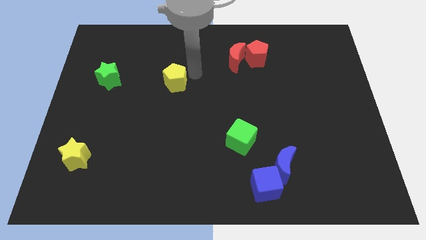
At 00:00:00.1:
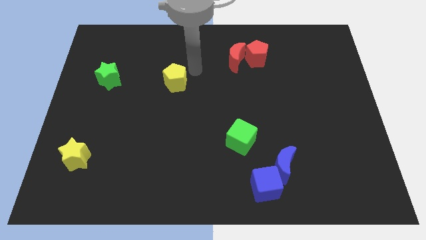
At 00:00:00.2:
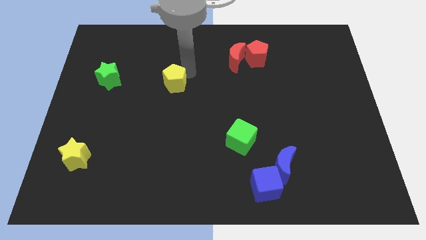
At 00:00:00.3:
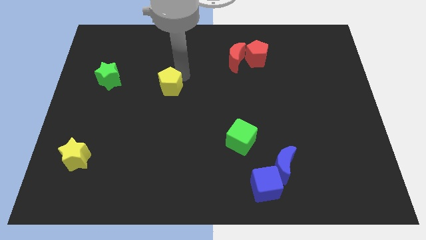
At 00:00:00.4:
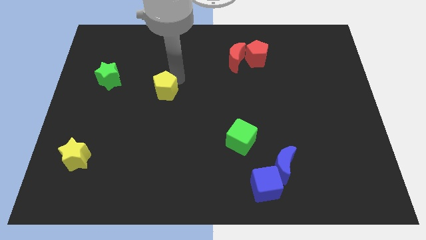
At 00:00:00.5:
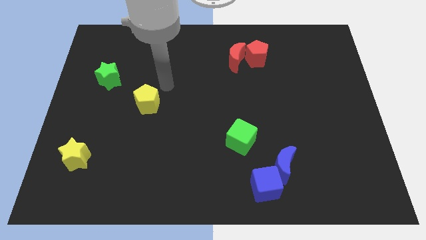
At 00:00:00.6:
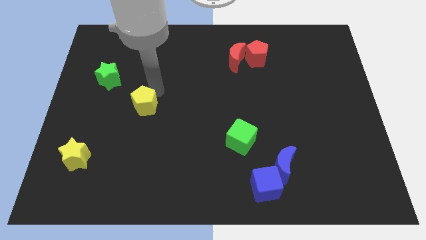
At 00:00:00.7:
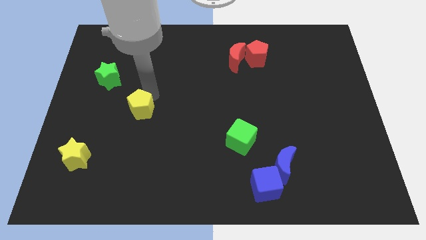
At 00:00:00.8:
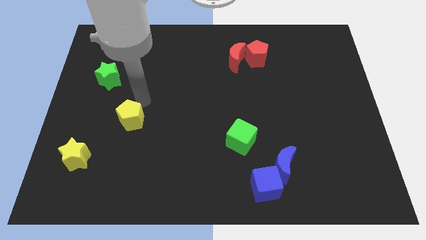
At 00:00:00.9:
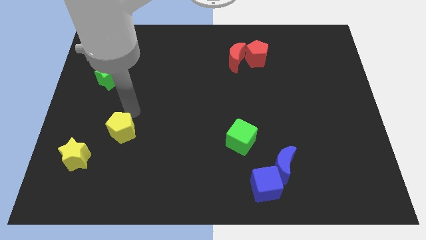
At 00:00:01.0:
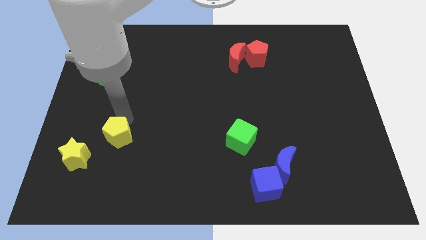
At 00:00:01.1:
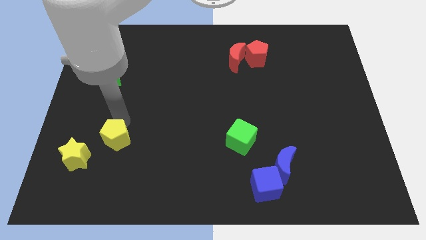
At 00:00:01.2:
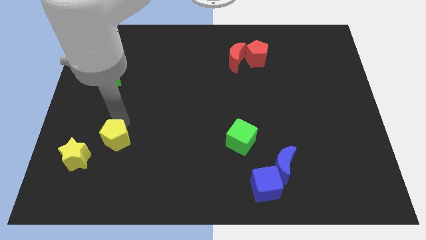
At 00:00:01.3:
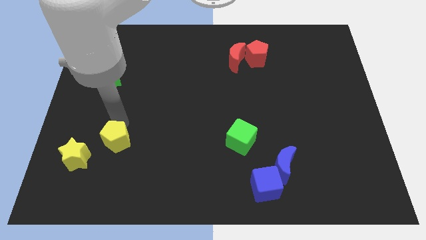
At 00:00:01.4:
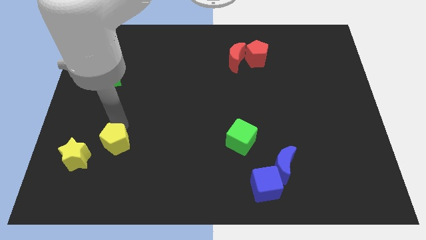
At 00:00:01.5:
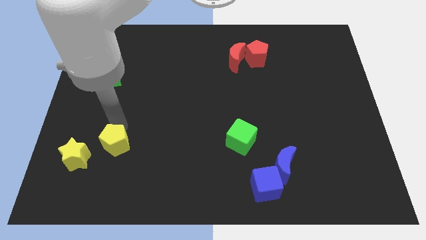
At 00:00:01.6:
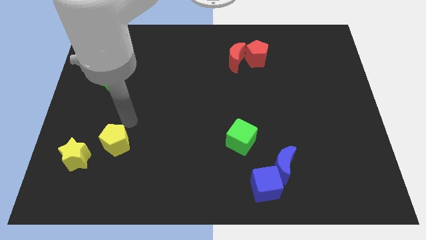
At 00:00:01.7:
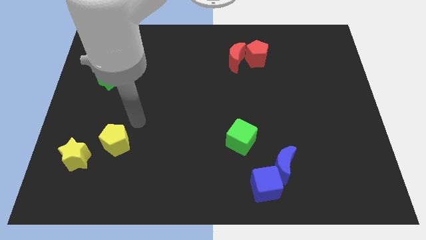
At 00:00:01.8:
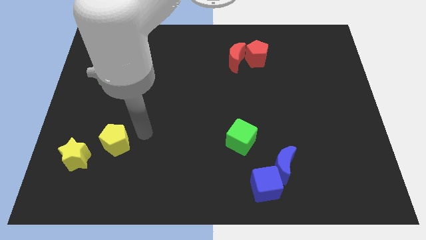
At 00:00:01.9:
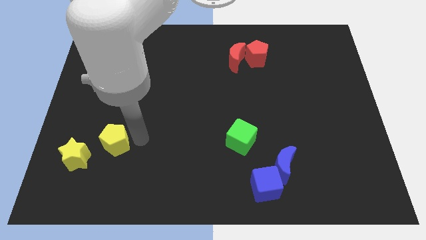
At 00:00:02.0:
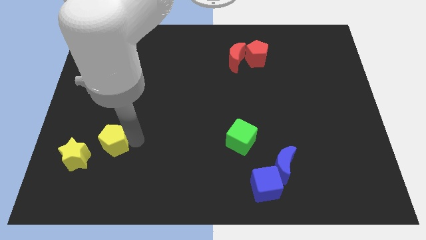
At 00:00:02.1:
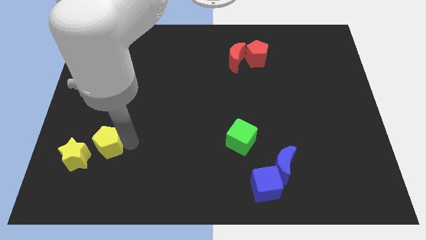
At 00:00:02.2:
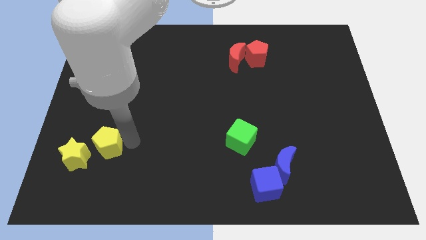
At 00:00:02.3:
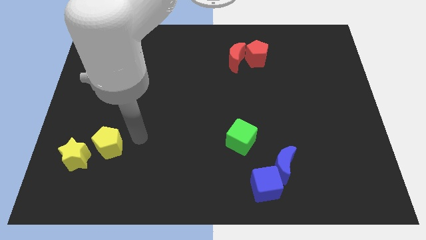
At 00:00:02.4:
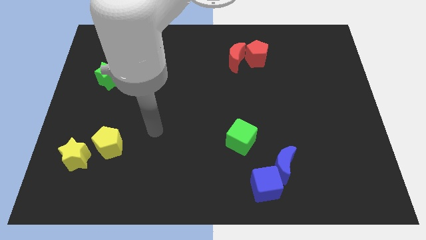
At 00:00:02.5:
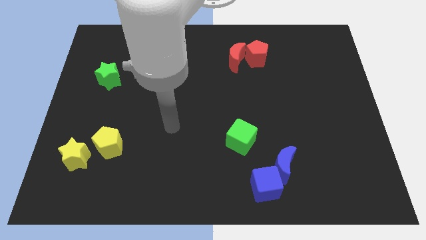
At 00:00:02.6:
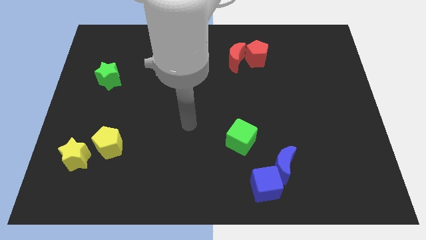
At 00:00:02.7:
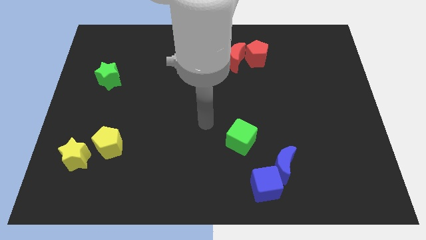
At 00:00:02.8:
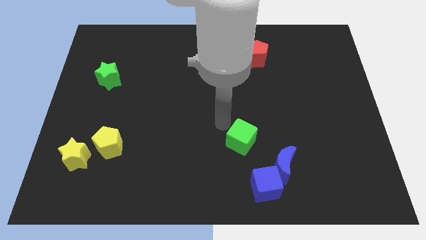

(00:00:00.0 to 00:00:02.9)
move yellow pentagon adjacent to yellow star

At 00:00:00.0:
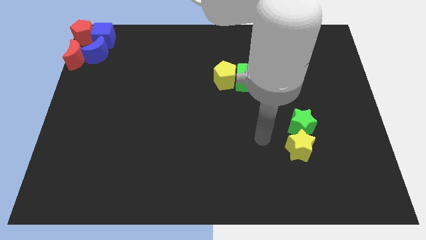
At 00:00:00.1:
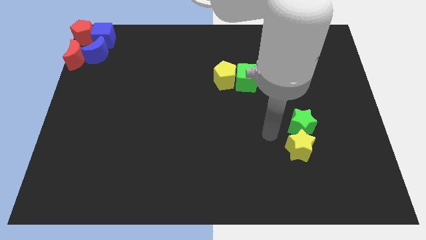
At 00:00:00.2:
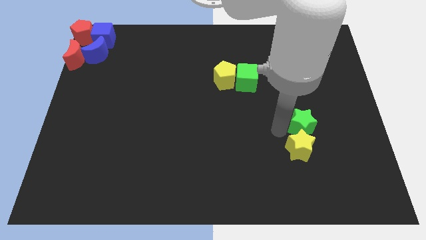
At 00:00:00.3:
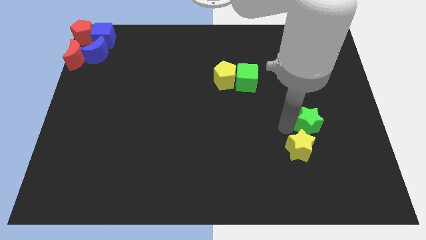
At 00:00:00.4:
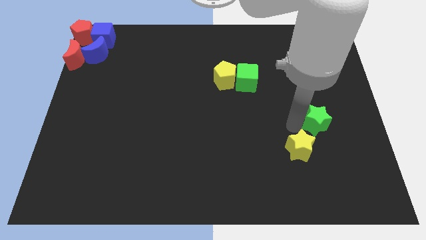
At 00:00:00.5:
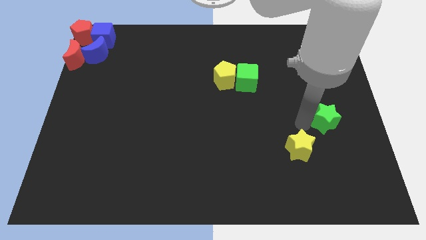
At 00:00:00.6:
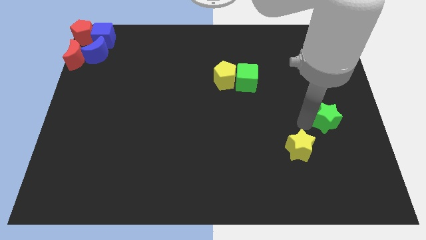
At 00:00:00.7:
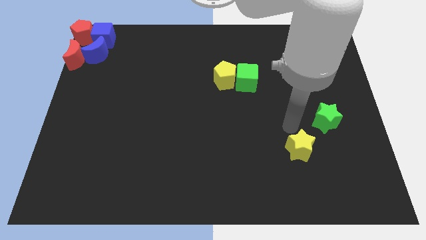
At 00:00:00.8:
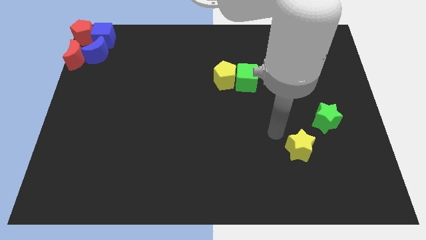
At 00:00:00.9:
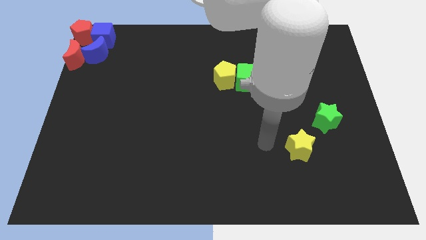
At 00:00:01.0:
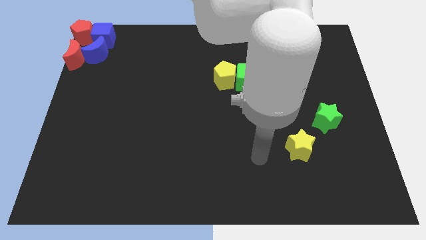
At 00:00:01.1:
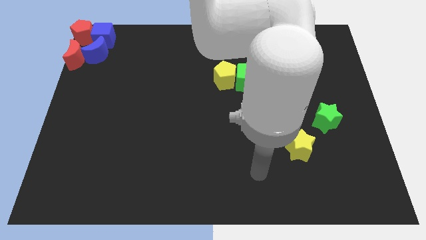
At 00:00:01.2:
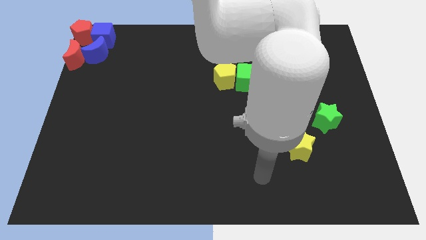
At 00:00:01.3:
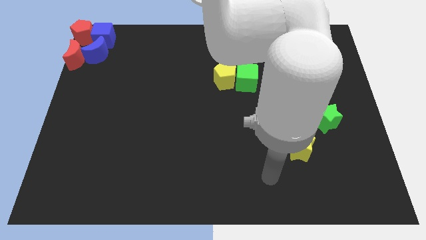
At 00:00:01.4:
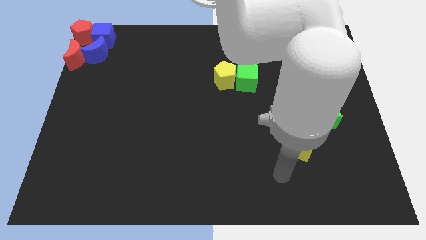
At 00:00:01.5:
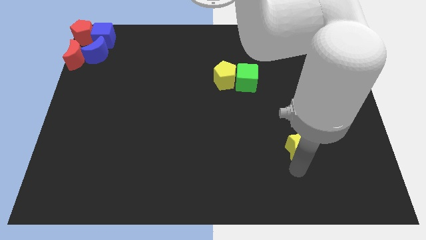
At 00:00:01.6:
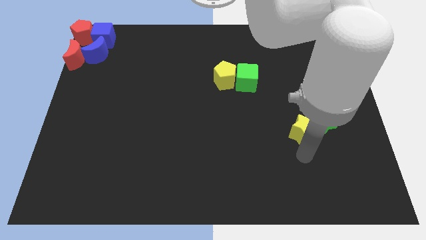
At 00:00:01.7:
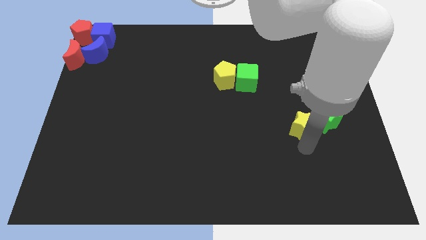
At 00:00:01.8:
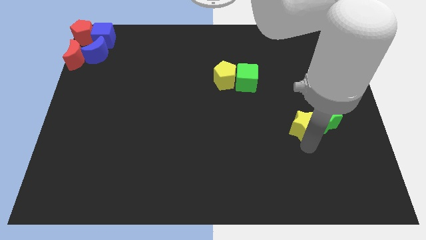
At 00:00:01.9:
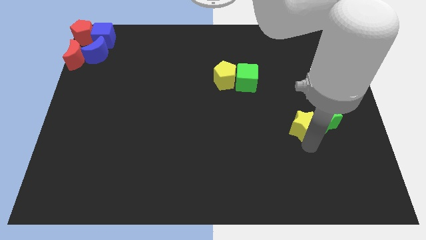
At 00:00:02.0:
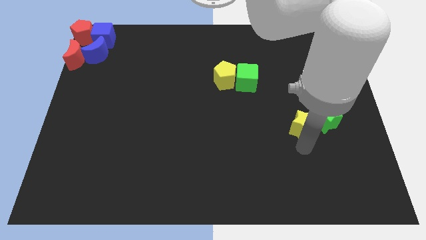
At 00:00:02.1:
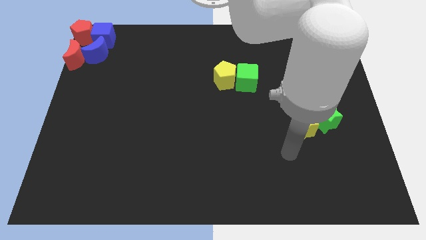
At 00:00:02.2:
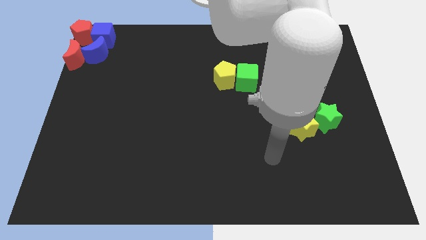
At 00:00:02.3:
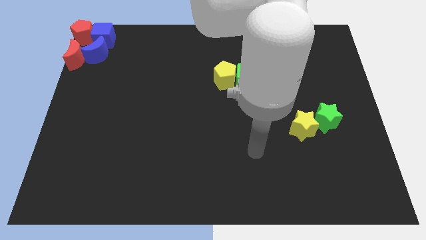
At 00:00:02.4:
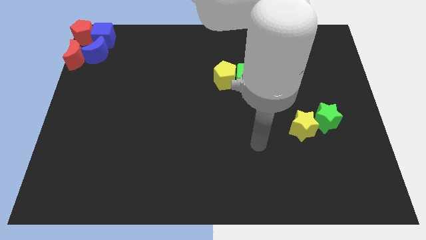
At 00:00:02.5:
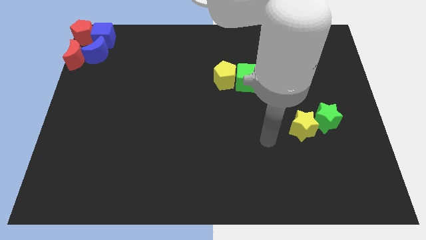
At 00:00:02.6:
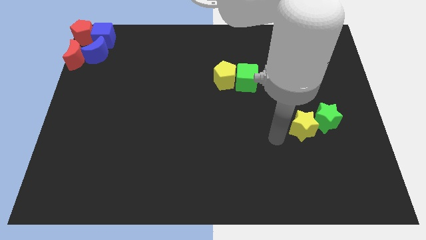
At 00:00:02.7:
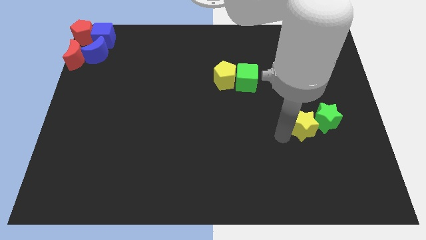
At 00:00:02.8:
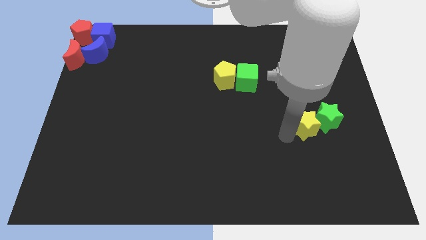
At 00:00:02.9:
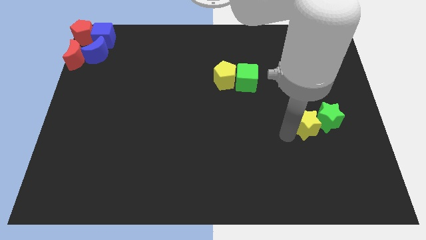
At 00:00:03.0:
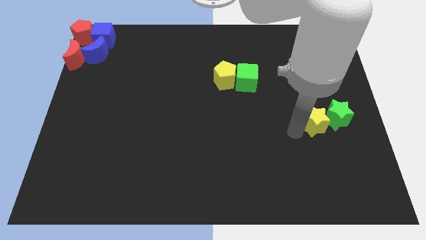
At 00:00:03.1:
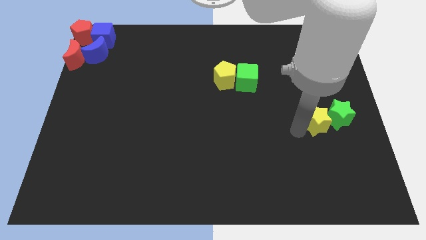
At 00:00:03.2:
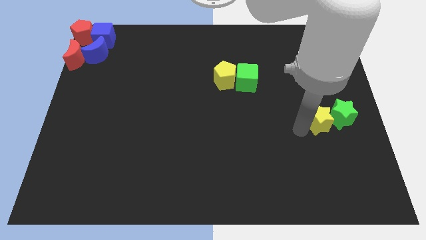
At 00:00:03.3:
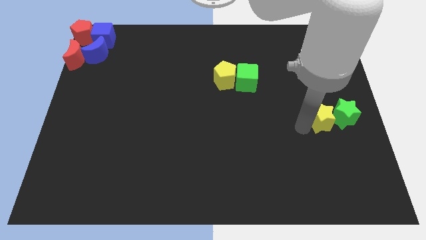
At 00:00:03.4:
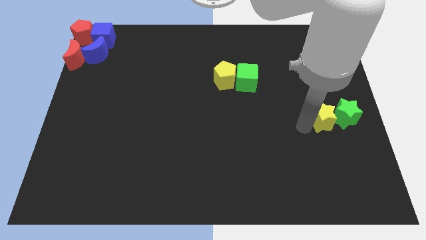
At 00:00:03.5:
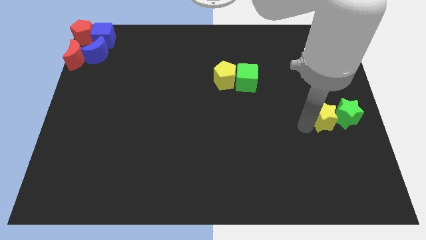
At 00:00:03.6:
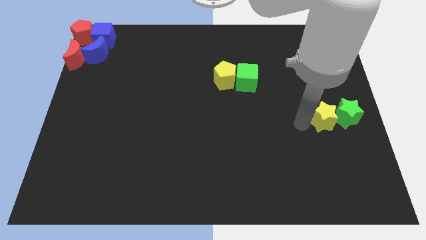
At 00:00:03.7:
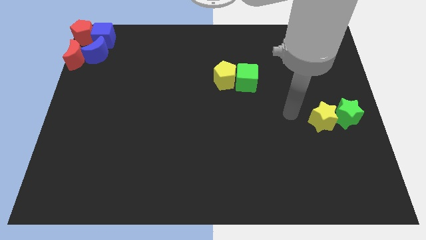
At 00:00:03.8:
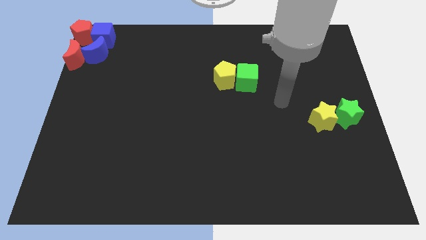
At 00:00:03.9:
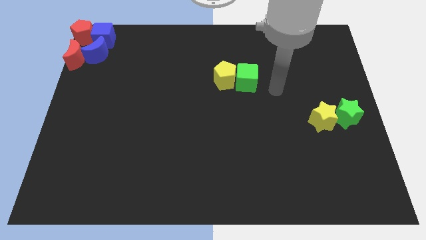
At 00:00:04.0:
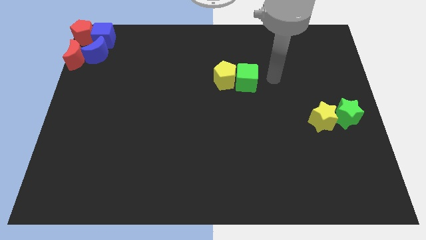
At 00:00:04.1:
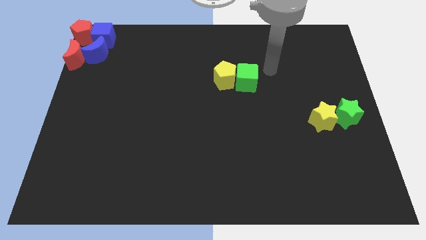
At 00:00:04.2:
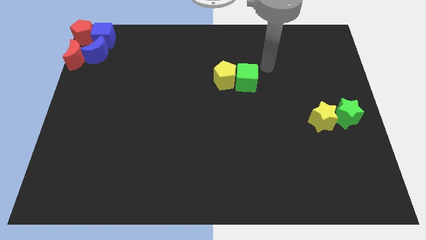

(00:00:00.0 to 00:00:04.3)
push the group of stars to the center right of the board

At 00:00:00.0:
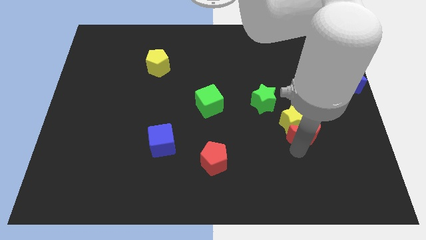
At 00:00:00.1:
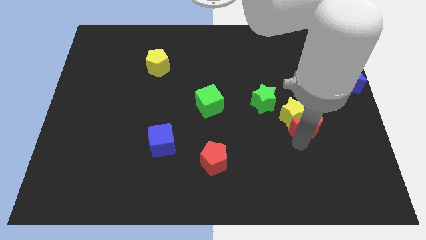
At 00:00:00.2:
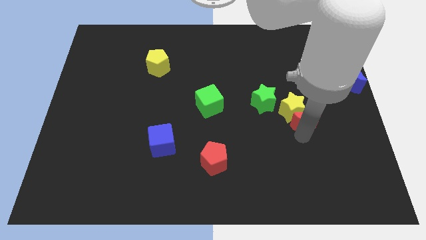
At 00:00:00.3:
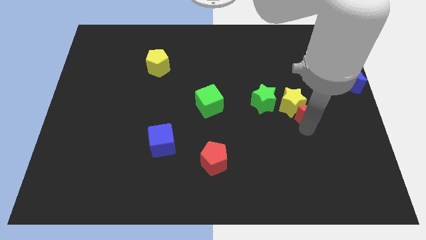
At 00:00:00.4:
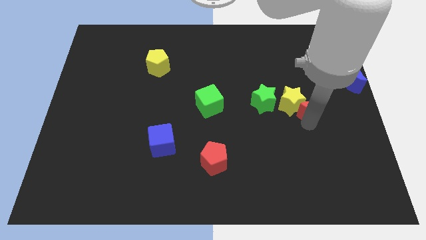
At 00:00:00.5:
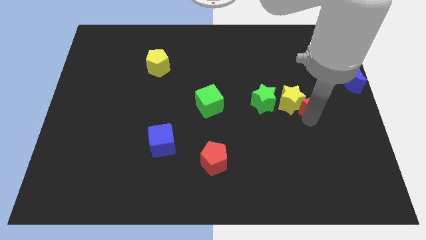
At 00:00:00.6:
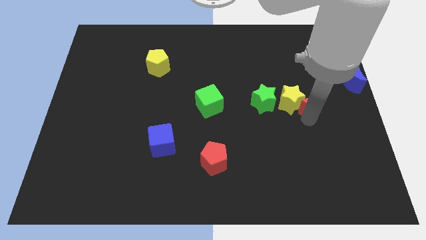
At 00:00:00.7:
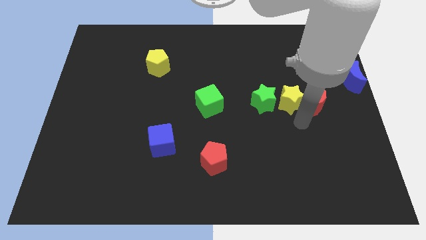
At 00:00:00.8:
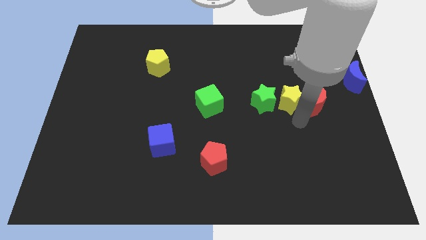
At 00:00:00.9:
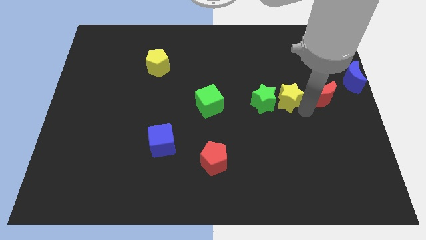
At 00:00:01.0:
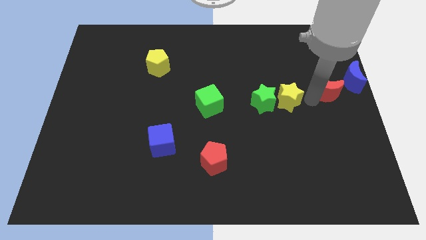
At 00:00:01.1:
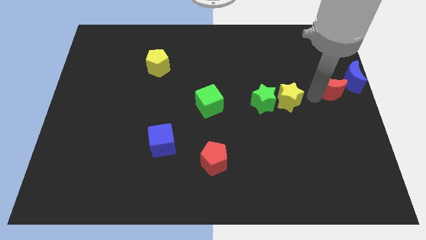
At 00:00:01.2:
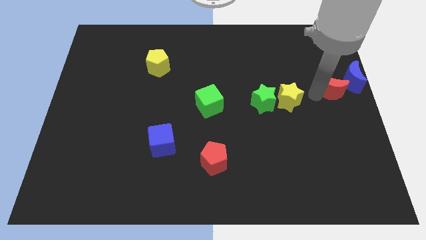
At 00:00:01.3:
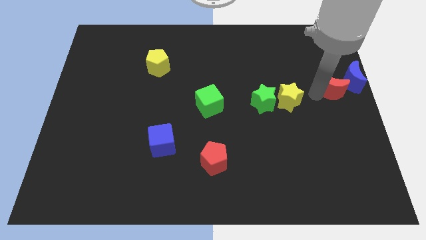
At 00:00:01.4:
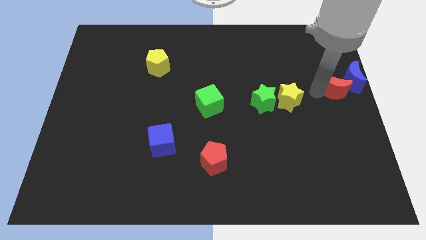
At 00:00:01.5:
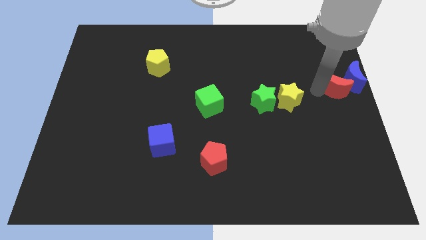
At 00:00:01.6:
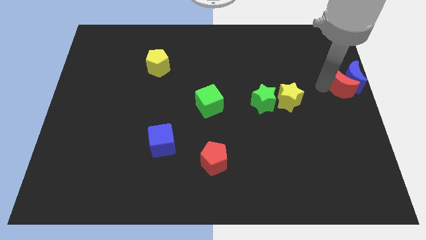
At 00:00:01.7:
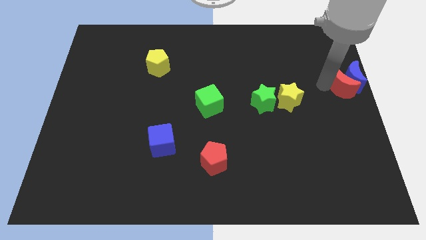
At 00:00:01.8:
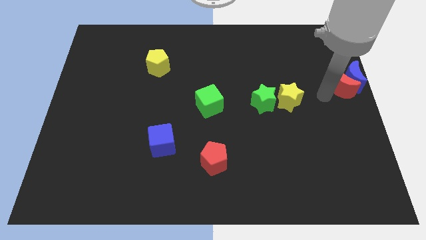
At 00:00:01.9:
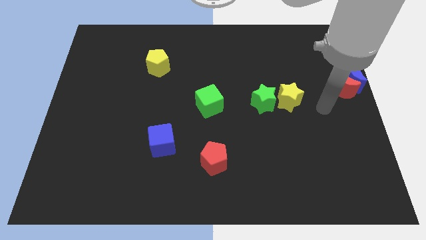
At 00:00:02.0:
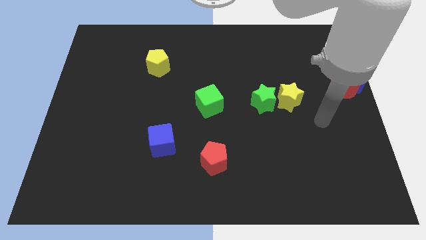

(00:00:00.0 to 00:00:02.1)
move the red crescent to the left side of the blue crescent
